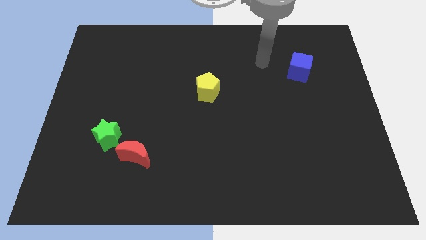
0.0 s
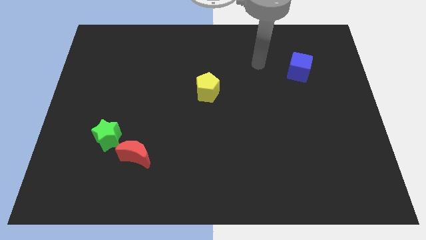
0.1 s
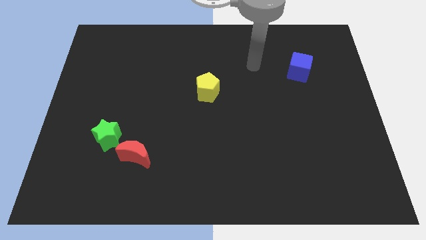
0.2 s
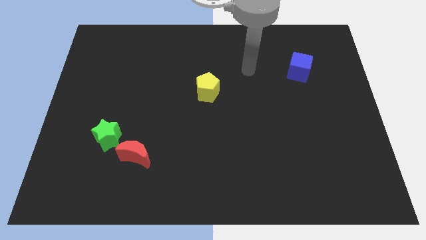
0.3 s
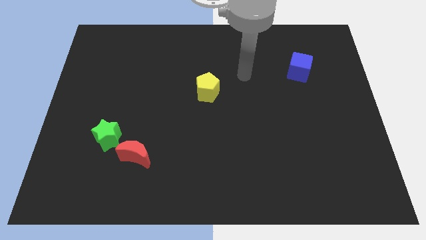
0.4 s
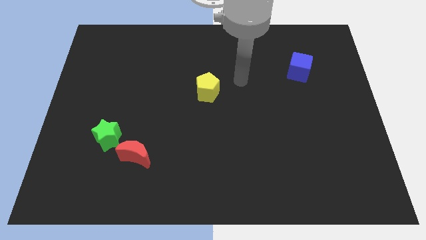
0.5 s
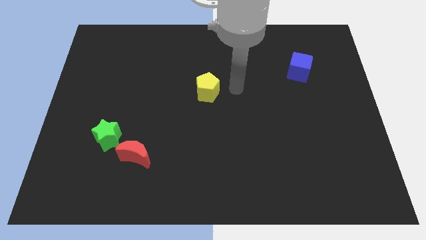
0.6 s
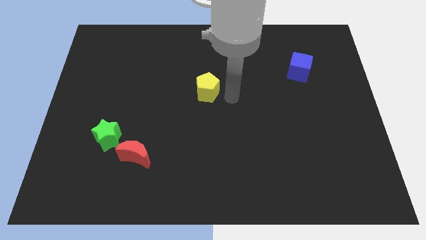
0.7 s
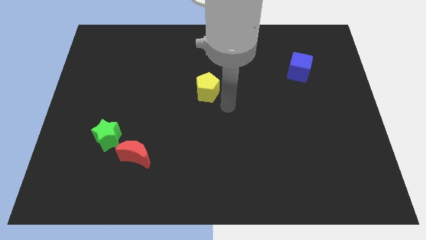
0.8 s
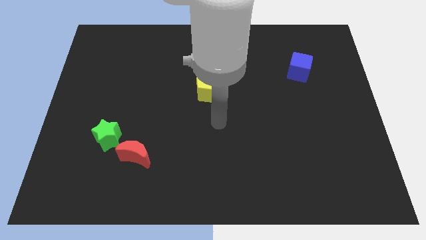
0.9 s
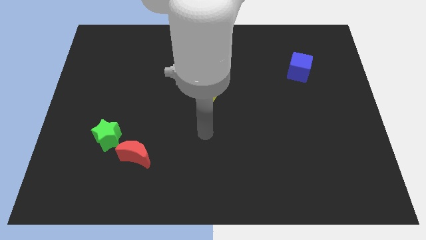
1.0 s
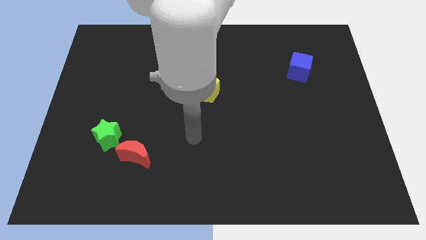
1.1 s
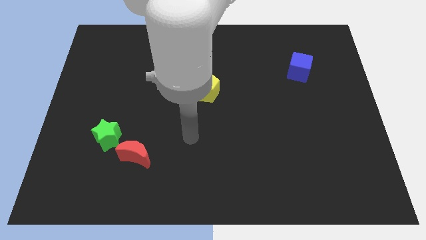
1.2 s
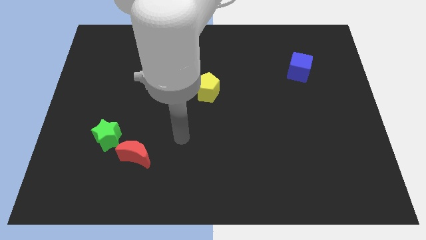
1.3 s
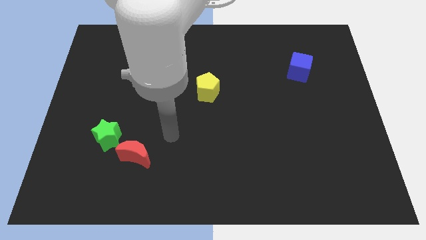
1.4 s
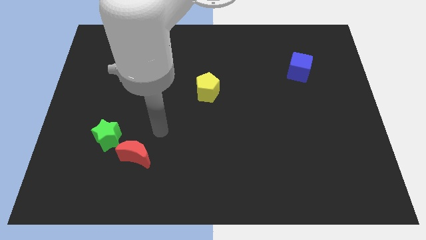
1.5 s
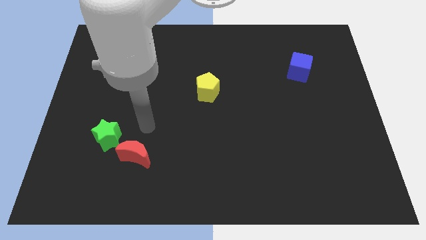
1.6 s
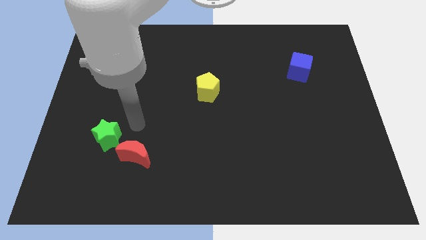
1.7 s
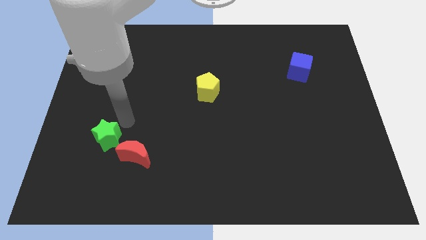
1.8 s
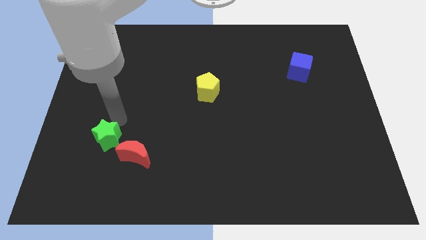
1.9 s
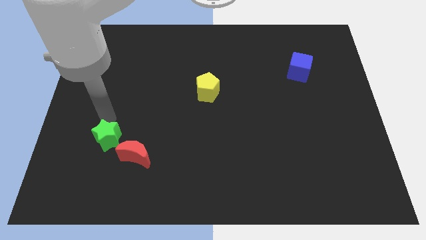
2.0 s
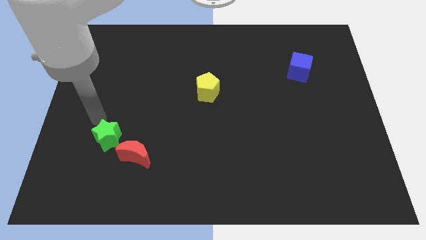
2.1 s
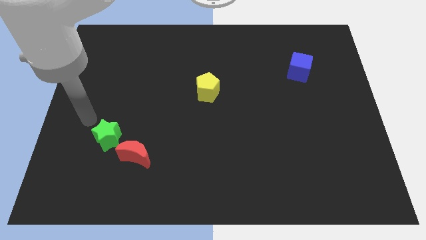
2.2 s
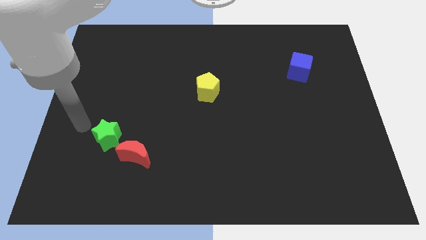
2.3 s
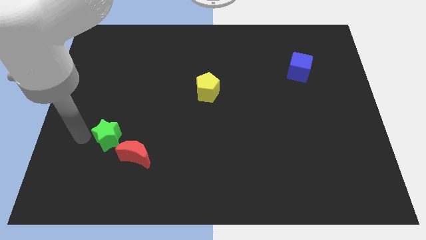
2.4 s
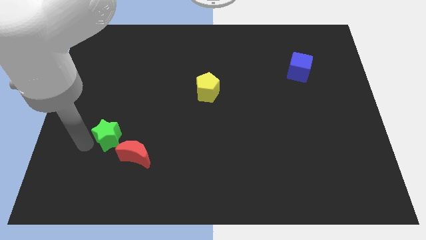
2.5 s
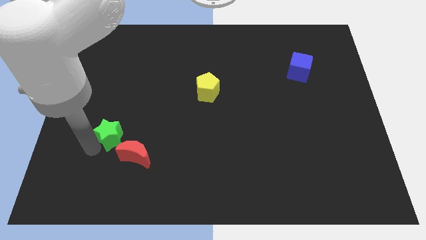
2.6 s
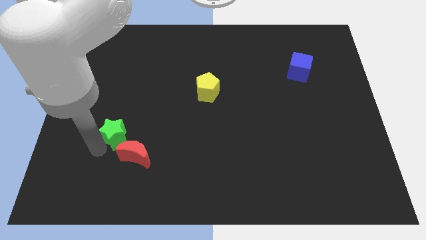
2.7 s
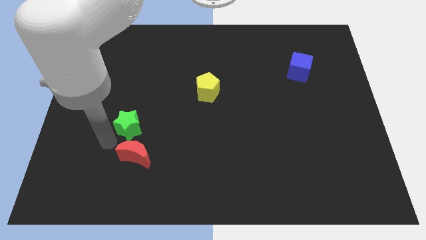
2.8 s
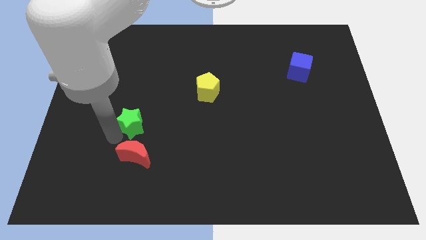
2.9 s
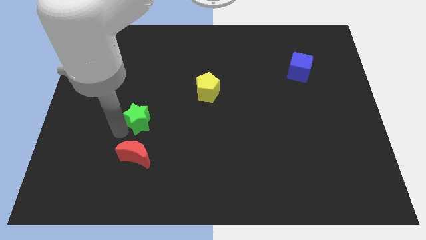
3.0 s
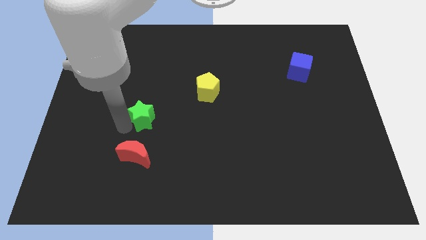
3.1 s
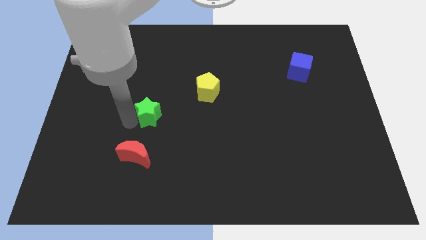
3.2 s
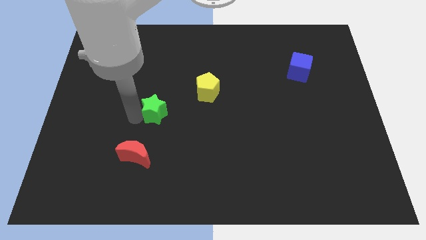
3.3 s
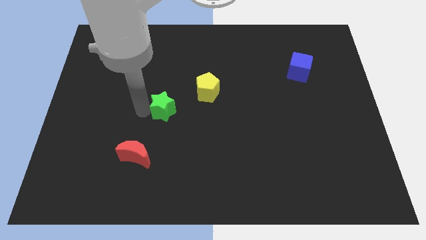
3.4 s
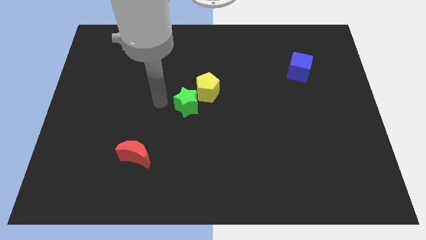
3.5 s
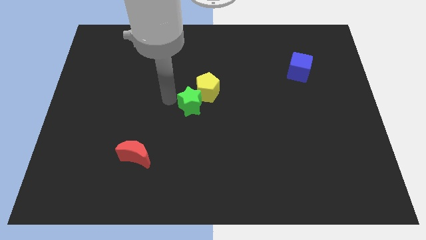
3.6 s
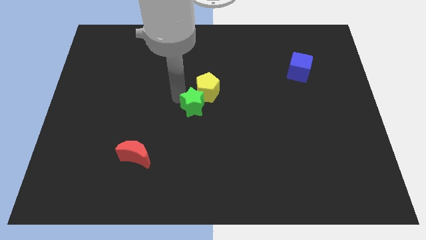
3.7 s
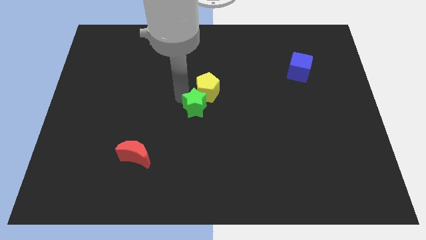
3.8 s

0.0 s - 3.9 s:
move the green star towards the yellow pentagon

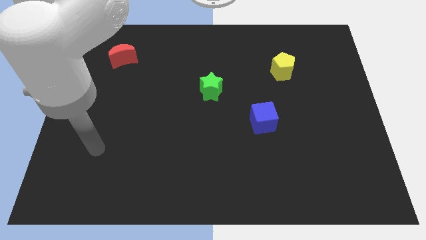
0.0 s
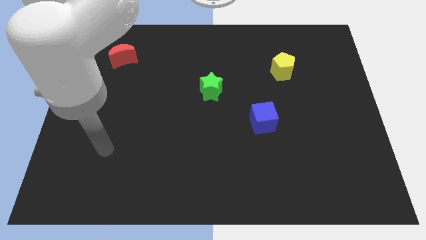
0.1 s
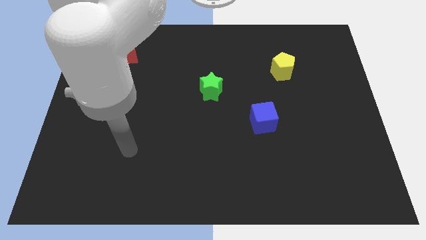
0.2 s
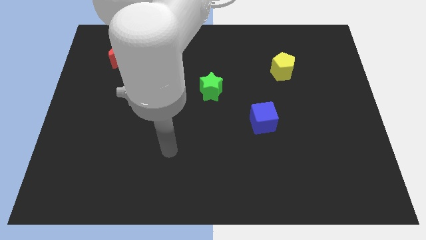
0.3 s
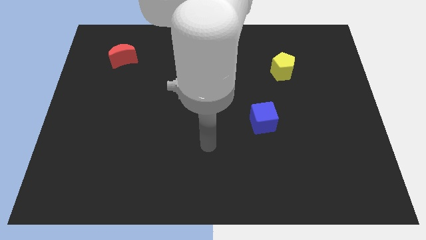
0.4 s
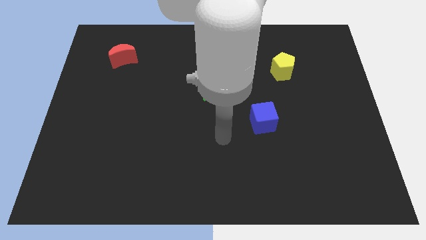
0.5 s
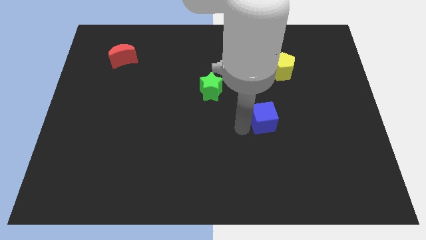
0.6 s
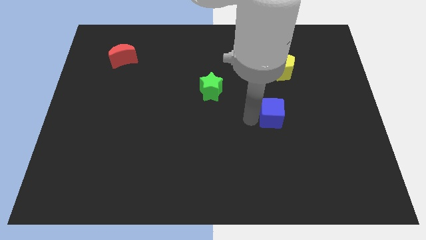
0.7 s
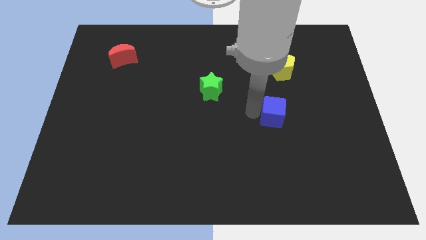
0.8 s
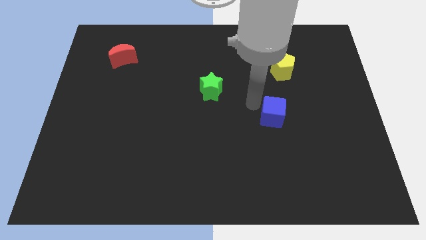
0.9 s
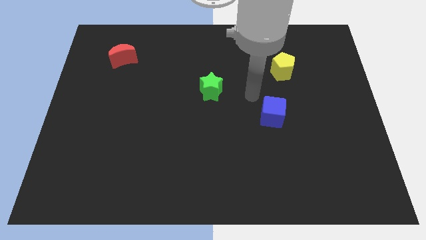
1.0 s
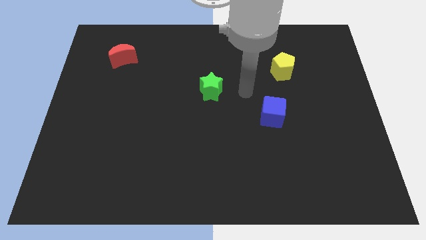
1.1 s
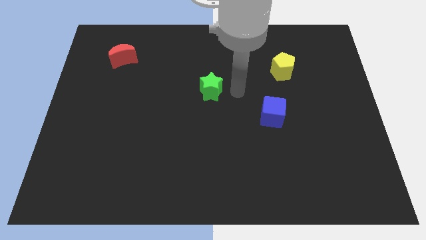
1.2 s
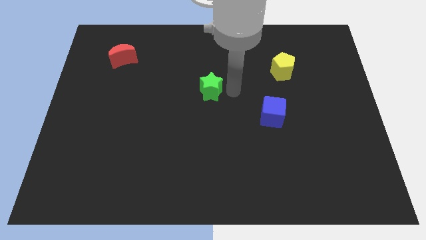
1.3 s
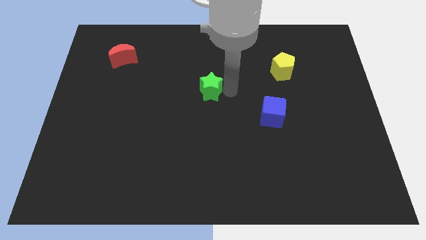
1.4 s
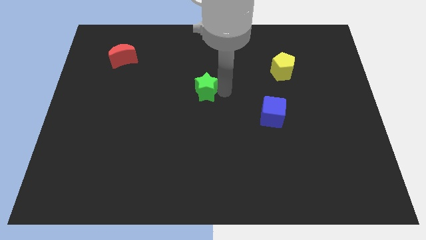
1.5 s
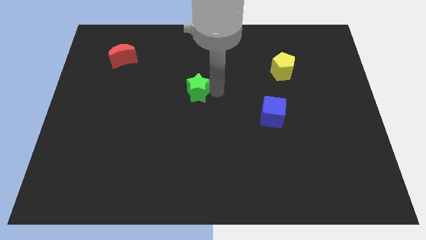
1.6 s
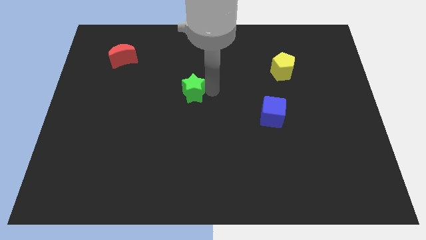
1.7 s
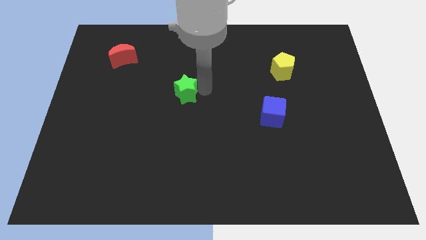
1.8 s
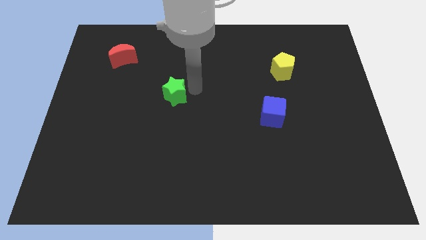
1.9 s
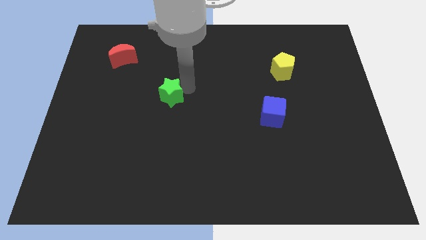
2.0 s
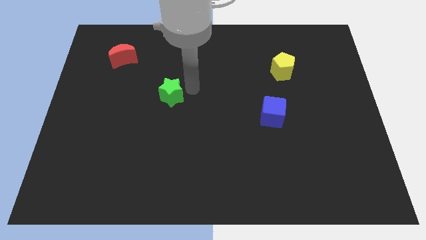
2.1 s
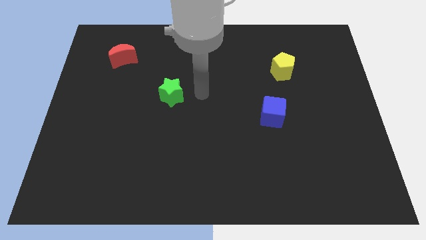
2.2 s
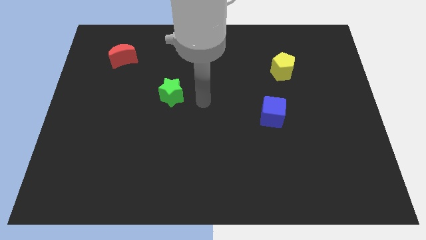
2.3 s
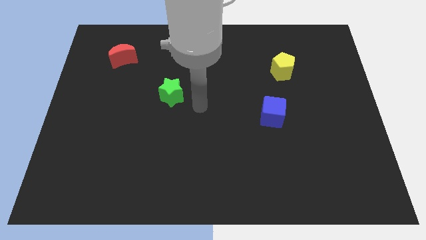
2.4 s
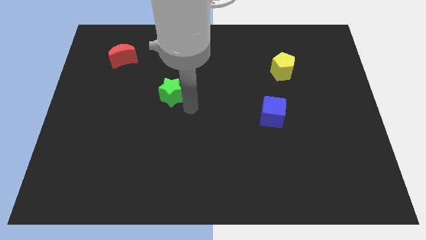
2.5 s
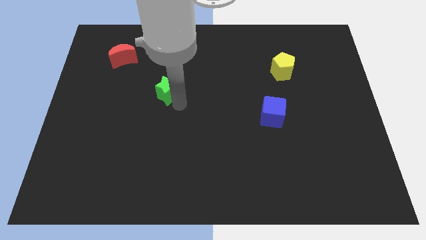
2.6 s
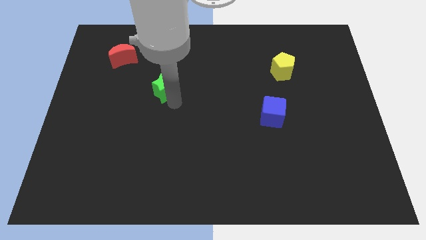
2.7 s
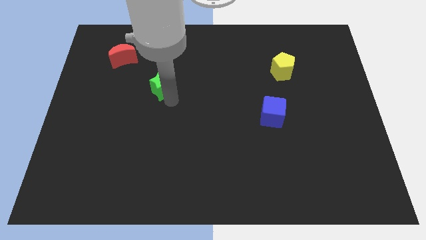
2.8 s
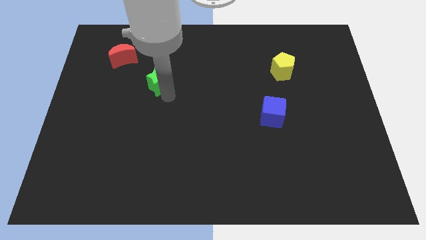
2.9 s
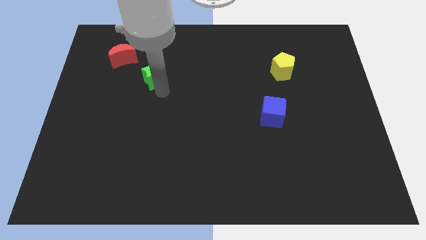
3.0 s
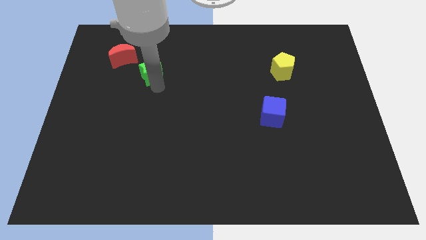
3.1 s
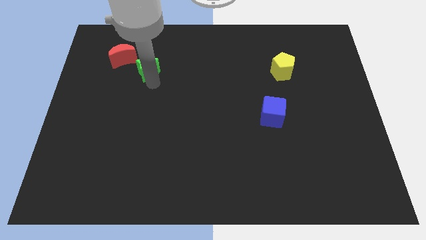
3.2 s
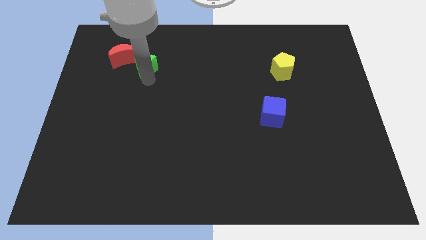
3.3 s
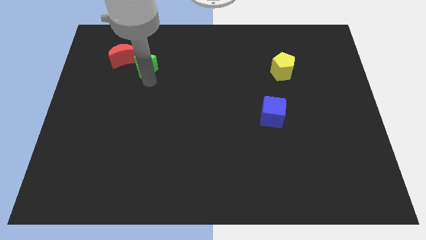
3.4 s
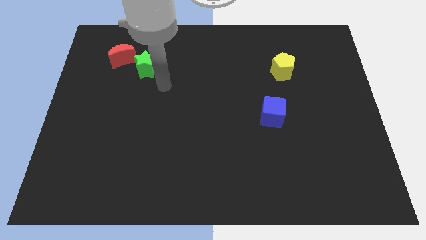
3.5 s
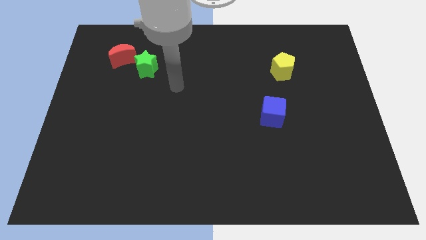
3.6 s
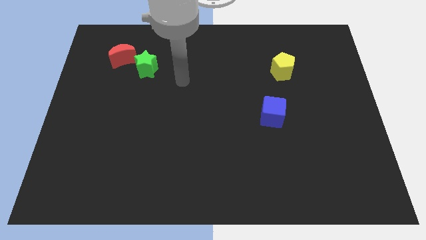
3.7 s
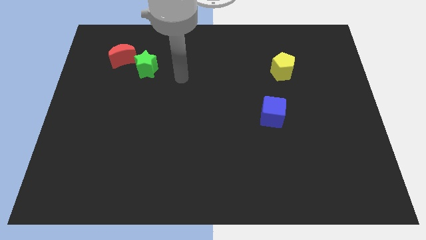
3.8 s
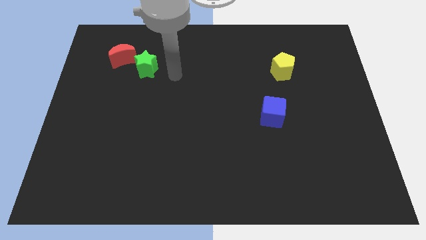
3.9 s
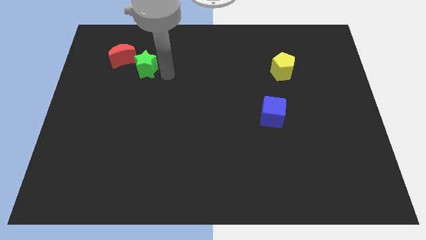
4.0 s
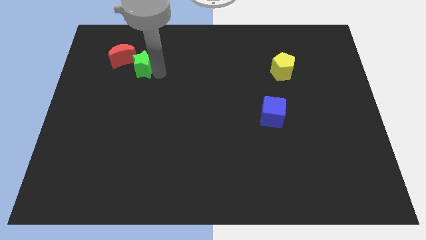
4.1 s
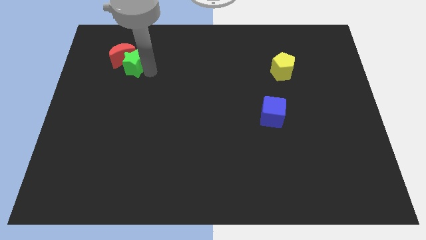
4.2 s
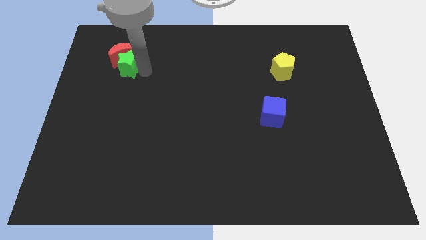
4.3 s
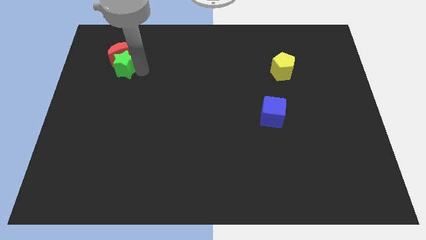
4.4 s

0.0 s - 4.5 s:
move the green block close to the red moon

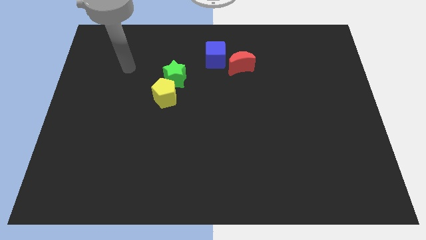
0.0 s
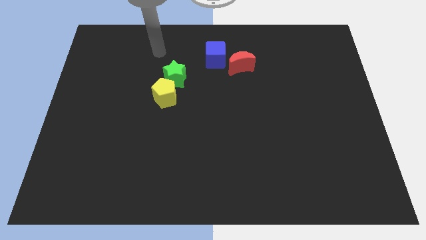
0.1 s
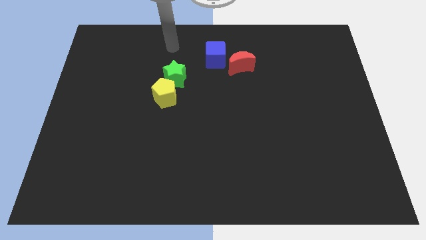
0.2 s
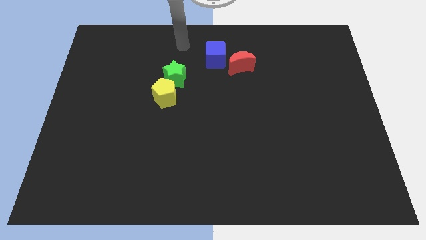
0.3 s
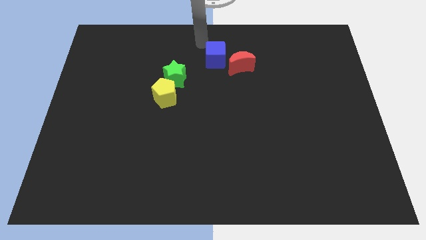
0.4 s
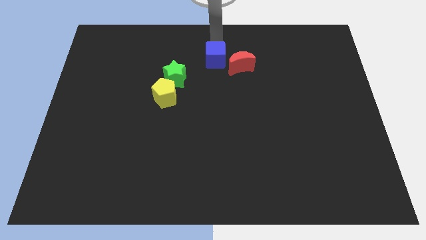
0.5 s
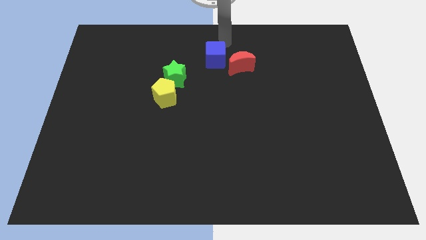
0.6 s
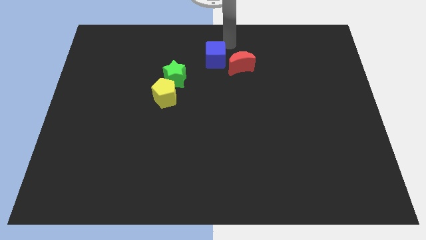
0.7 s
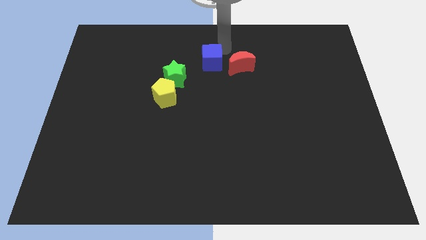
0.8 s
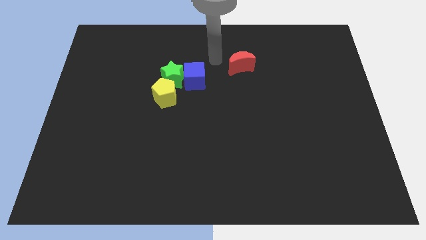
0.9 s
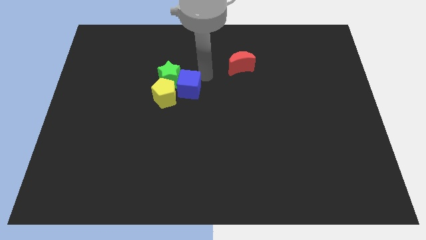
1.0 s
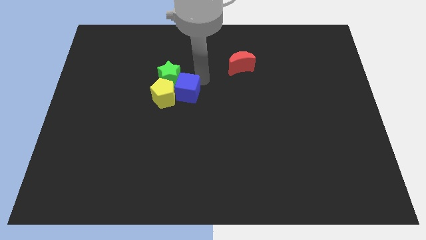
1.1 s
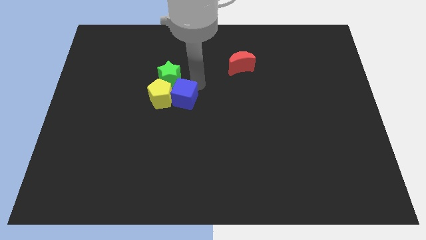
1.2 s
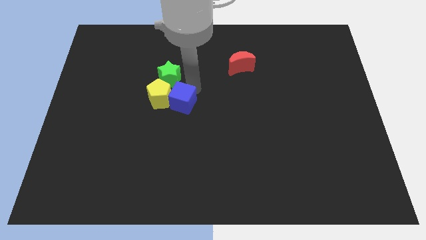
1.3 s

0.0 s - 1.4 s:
move the cube close to the yellow pentagon
